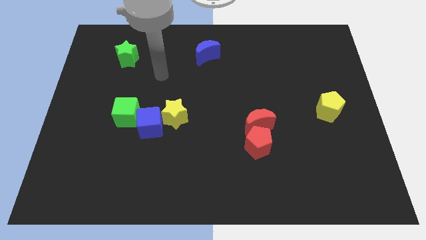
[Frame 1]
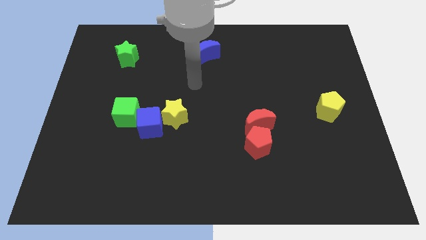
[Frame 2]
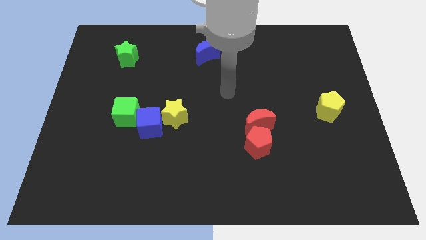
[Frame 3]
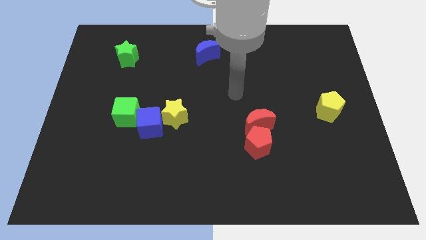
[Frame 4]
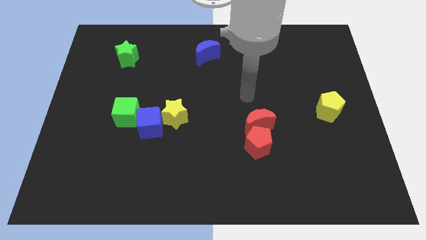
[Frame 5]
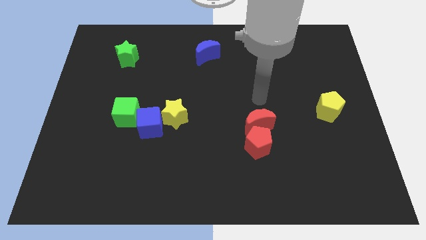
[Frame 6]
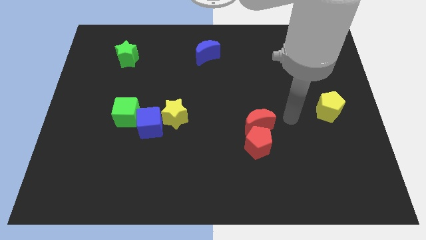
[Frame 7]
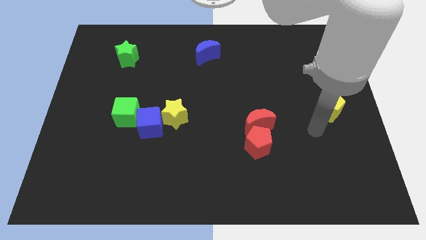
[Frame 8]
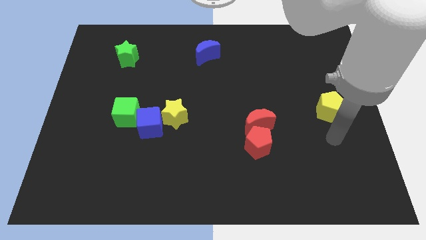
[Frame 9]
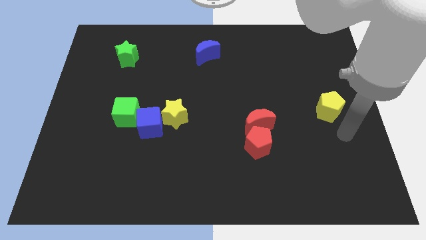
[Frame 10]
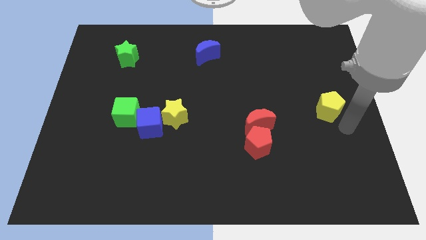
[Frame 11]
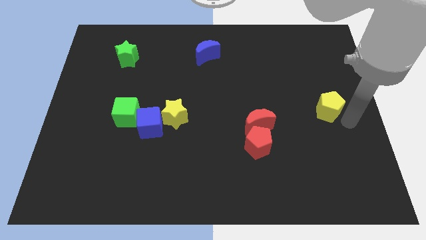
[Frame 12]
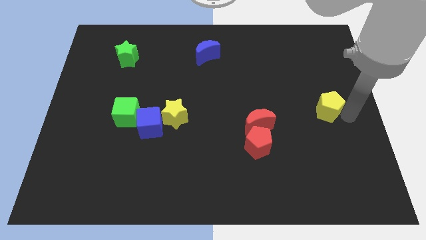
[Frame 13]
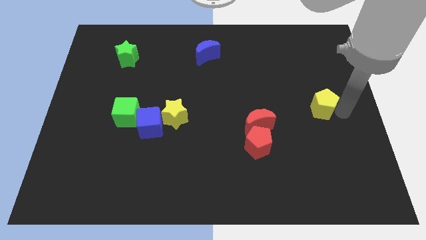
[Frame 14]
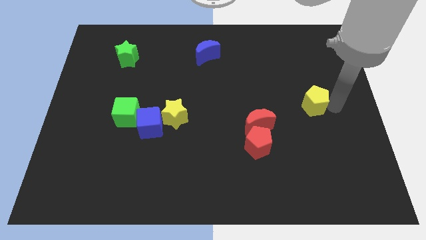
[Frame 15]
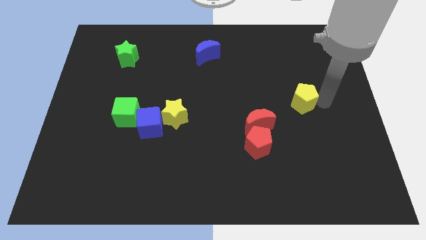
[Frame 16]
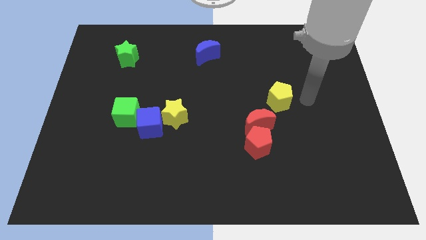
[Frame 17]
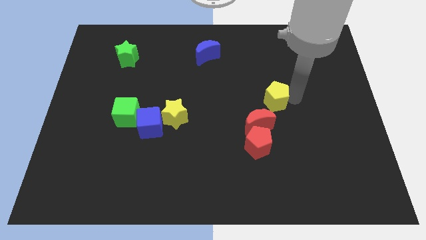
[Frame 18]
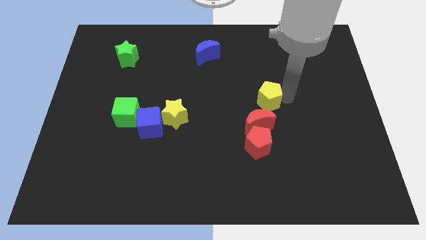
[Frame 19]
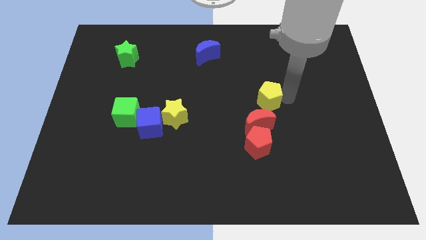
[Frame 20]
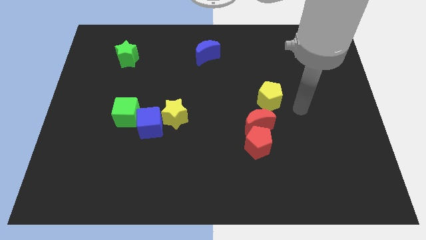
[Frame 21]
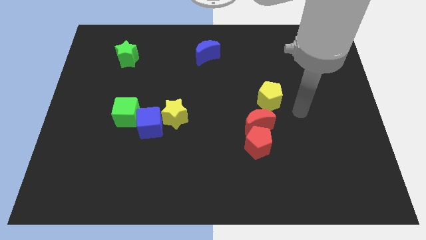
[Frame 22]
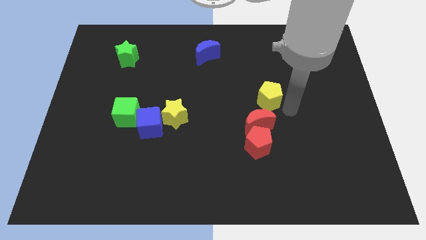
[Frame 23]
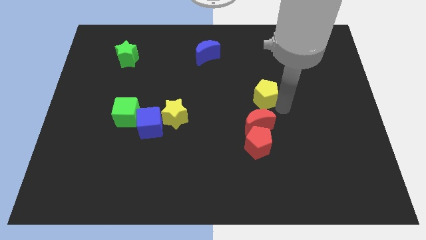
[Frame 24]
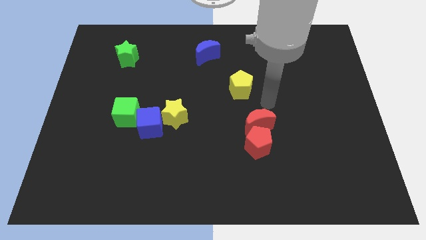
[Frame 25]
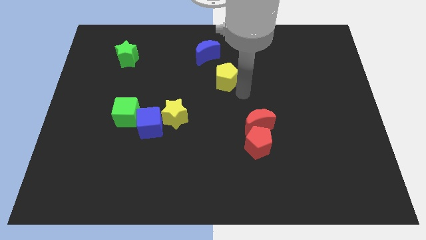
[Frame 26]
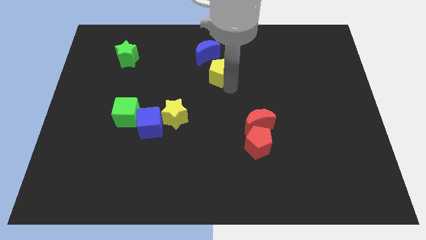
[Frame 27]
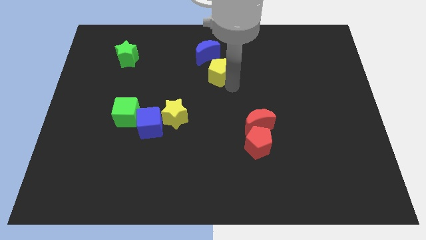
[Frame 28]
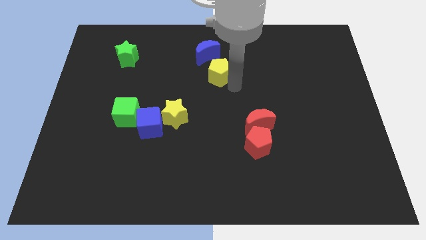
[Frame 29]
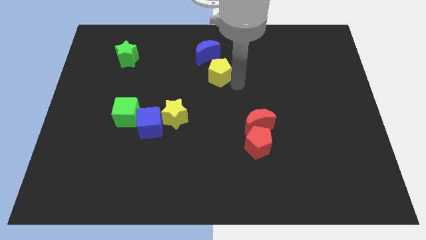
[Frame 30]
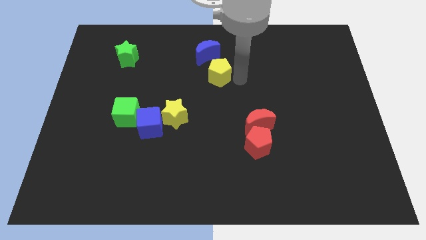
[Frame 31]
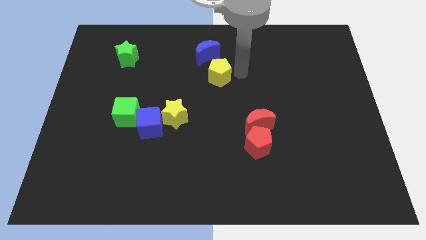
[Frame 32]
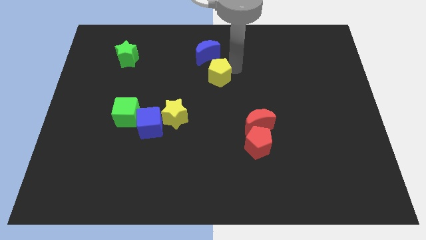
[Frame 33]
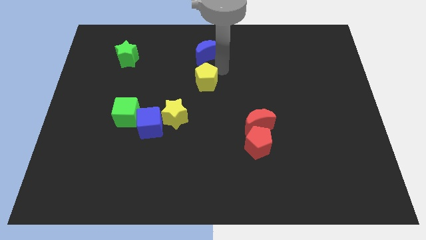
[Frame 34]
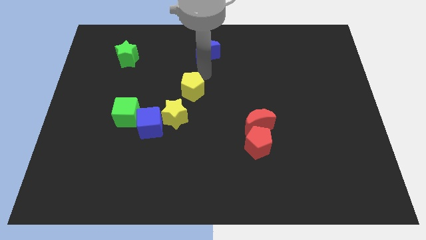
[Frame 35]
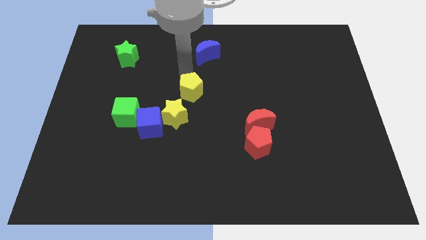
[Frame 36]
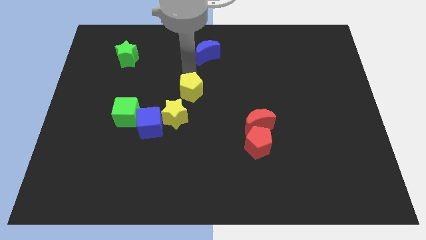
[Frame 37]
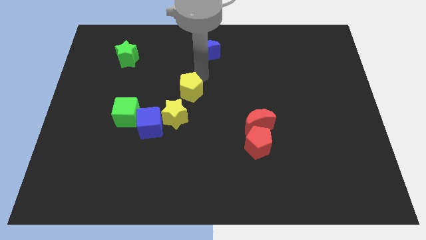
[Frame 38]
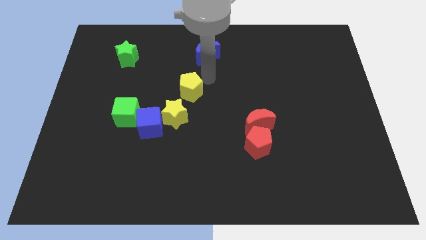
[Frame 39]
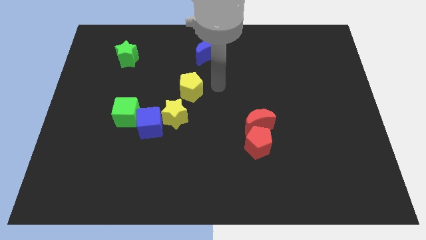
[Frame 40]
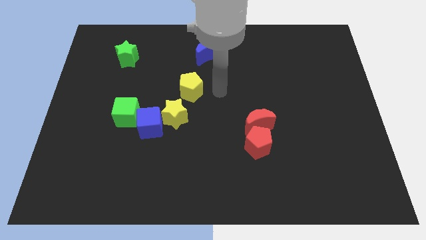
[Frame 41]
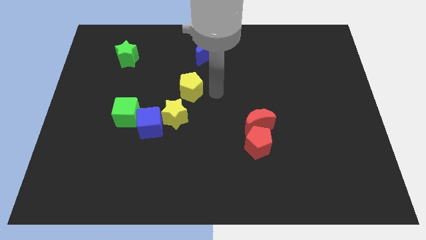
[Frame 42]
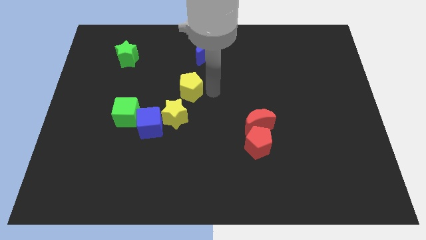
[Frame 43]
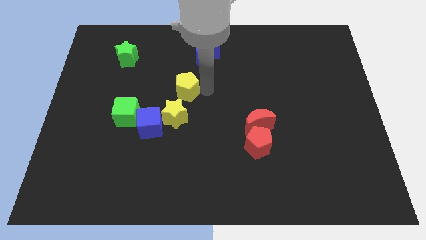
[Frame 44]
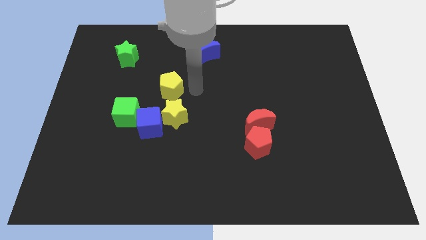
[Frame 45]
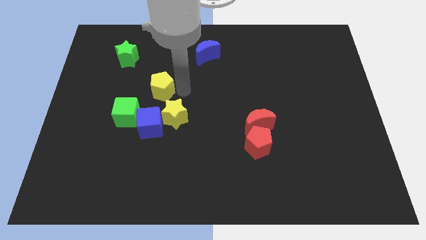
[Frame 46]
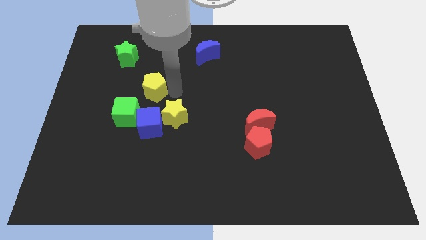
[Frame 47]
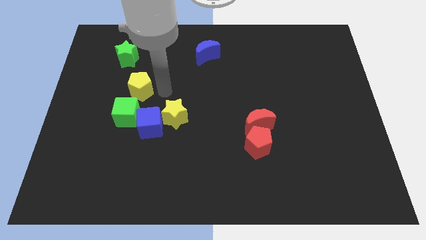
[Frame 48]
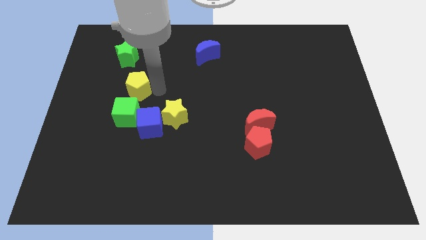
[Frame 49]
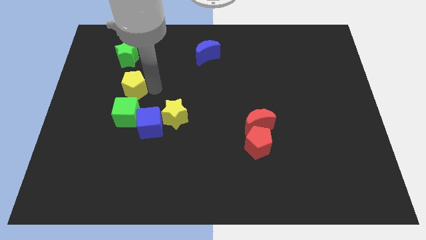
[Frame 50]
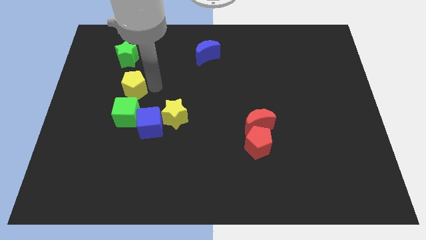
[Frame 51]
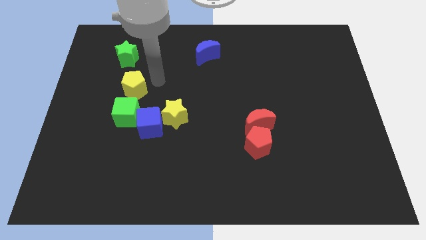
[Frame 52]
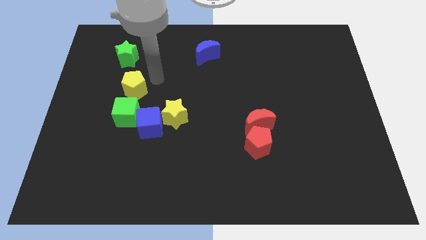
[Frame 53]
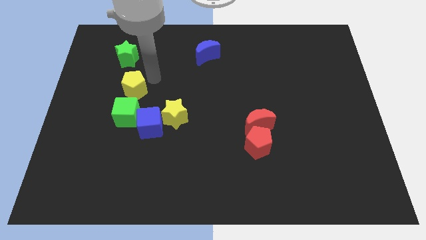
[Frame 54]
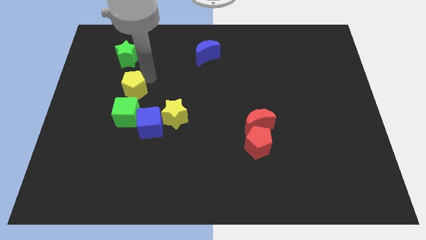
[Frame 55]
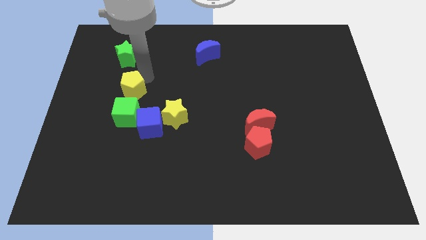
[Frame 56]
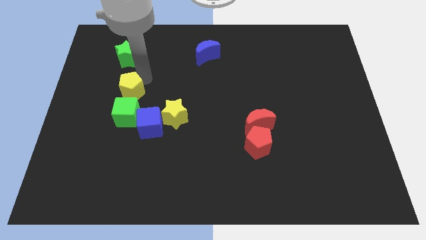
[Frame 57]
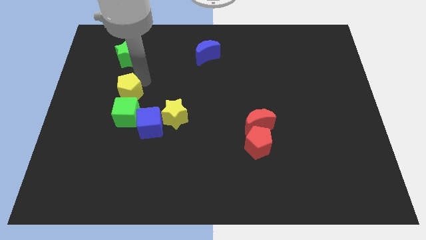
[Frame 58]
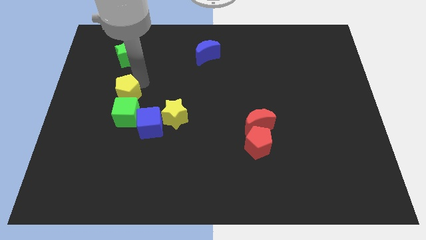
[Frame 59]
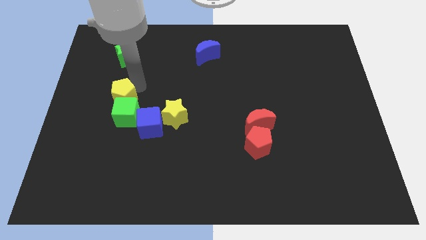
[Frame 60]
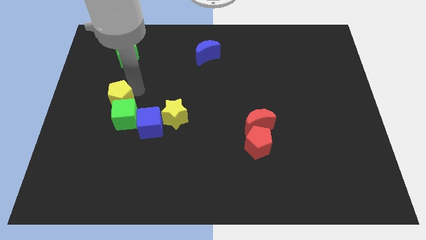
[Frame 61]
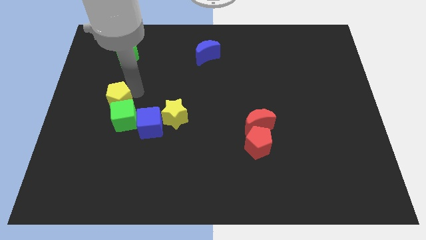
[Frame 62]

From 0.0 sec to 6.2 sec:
move the yellow pentagon to the green cube

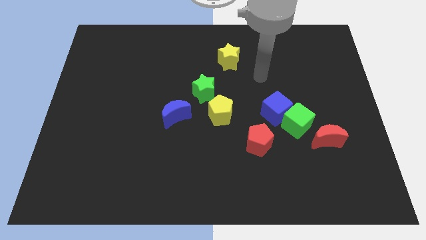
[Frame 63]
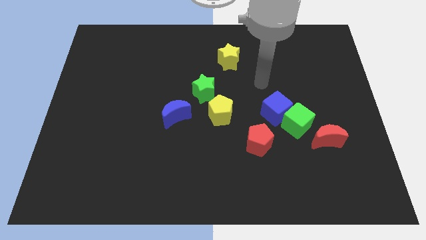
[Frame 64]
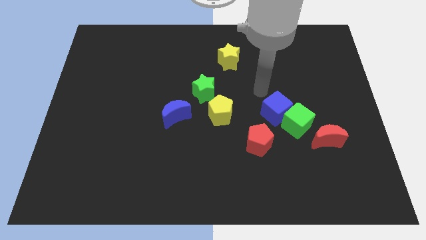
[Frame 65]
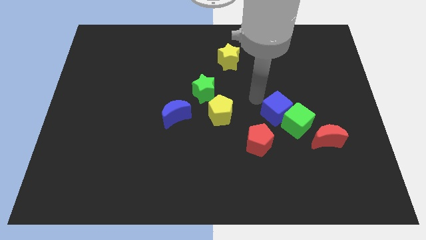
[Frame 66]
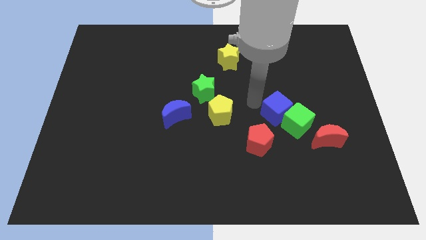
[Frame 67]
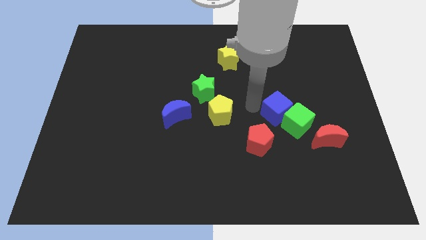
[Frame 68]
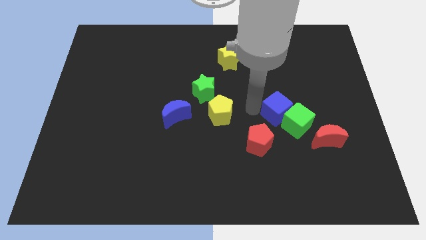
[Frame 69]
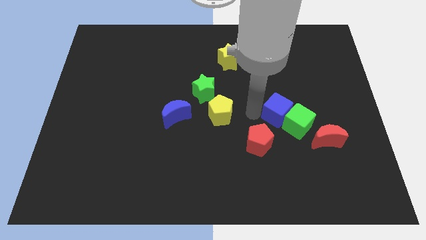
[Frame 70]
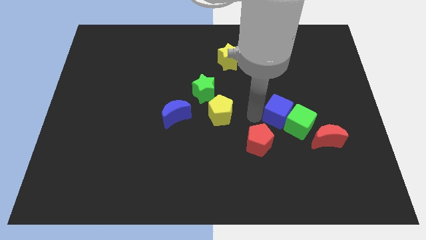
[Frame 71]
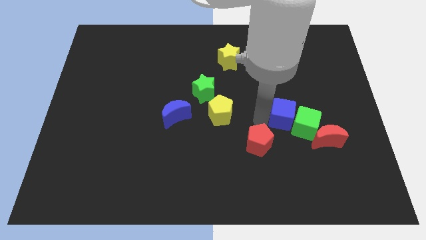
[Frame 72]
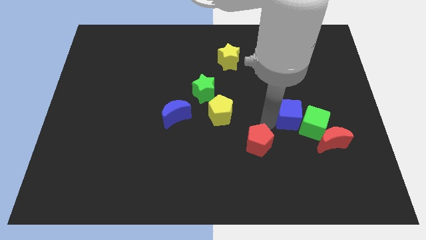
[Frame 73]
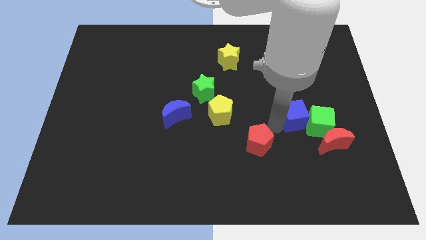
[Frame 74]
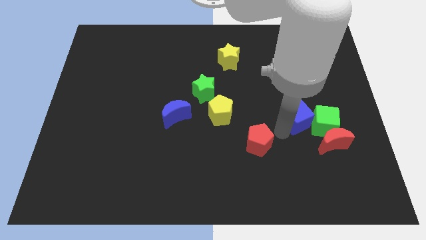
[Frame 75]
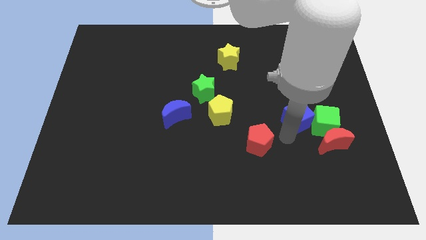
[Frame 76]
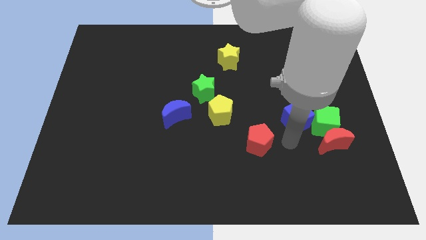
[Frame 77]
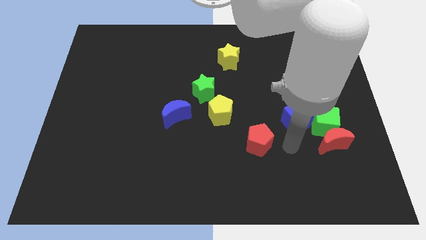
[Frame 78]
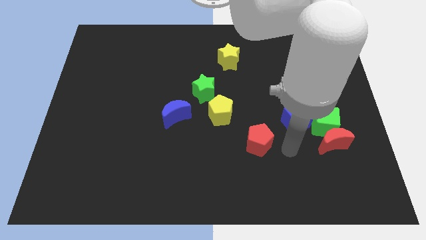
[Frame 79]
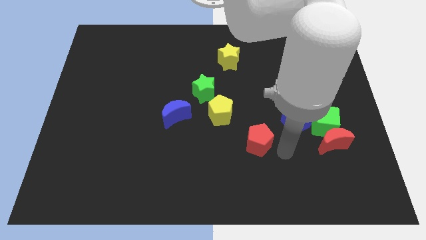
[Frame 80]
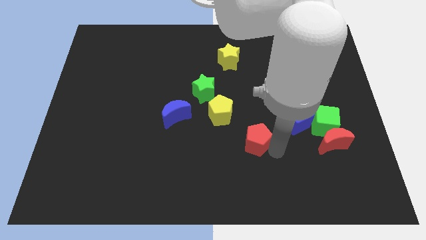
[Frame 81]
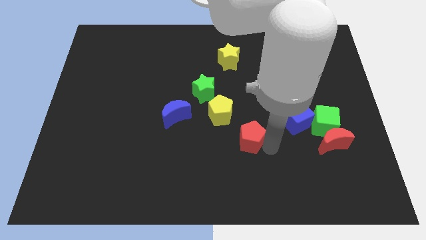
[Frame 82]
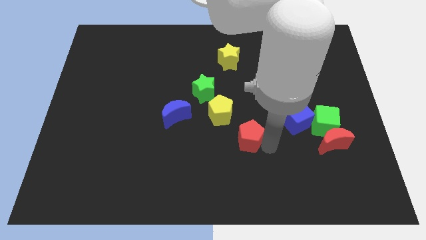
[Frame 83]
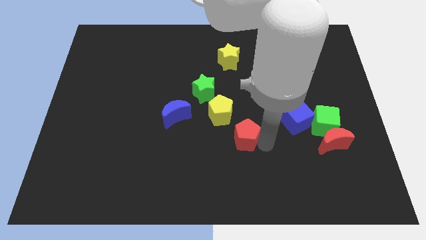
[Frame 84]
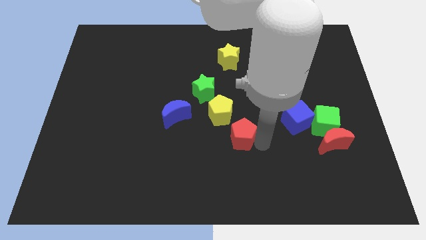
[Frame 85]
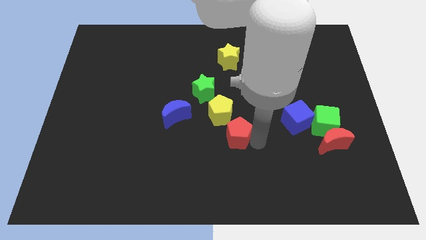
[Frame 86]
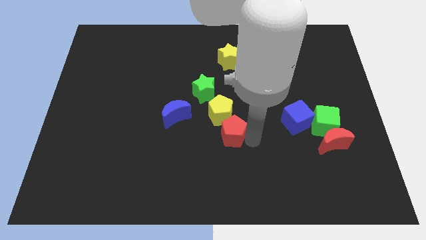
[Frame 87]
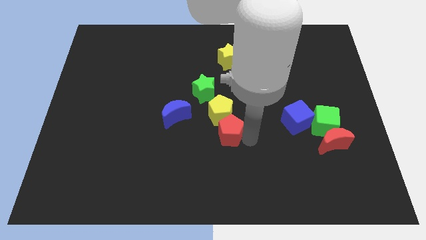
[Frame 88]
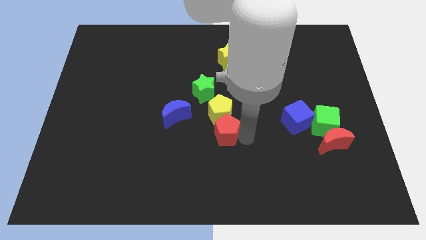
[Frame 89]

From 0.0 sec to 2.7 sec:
push the red pentagon towards the yellow pentagon
